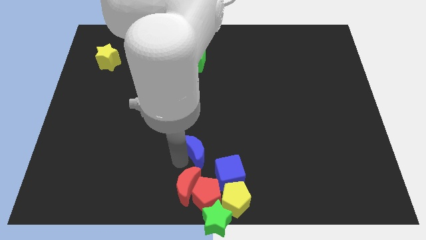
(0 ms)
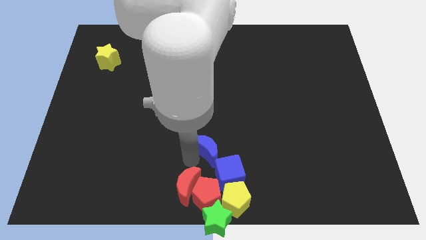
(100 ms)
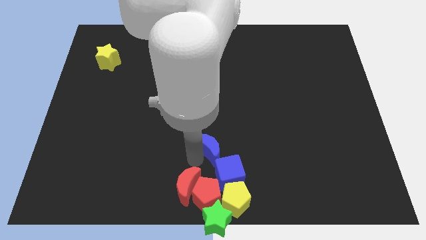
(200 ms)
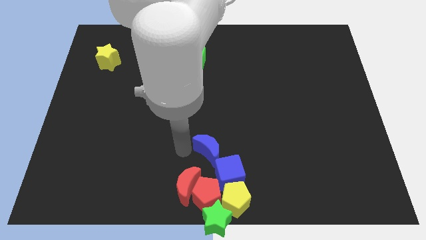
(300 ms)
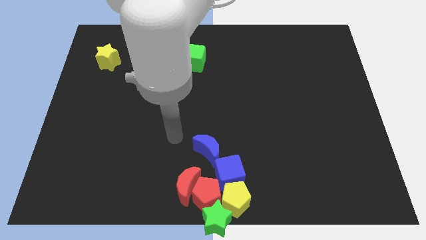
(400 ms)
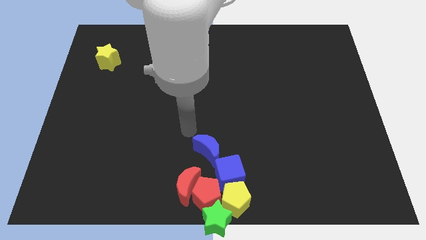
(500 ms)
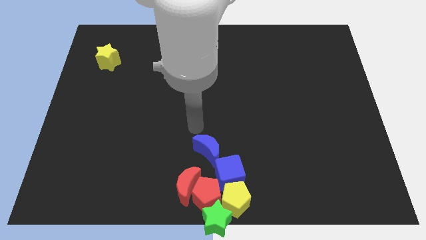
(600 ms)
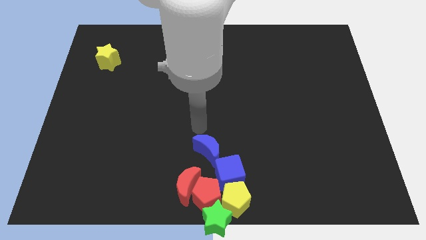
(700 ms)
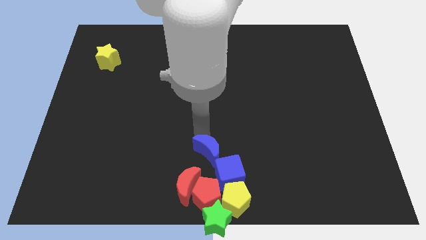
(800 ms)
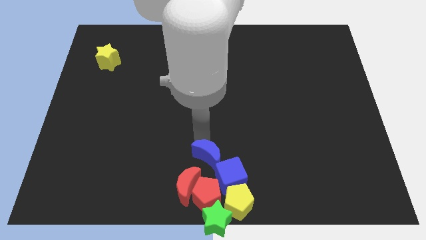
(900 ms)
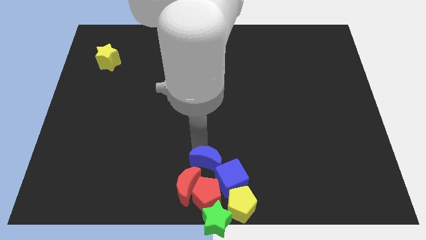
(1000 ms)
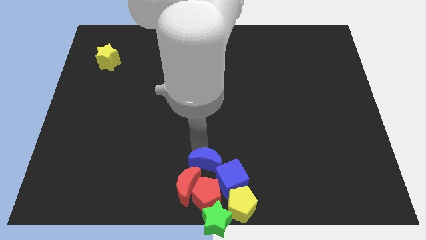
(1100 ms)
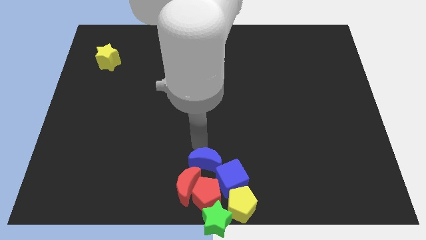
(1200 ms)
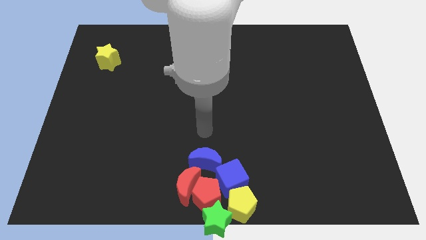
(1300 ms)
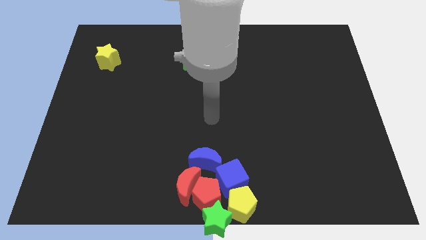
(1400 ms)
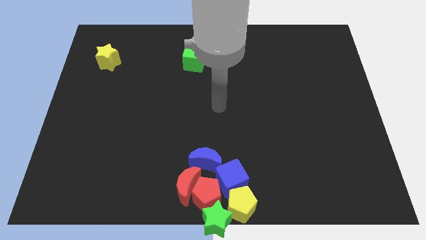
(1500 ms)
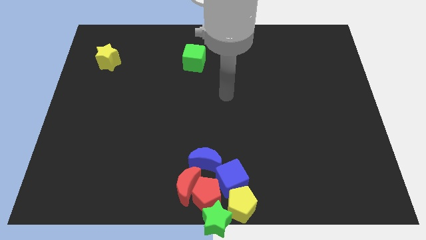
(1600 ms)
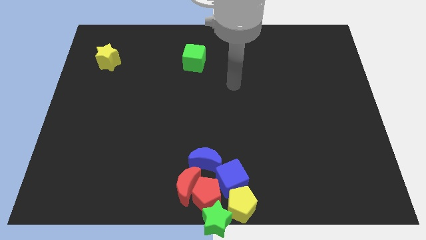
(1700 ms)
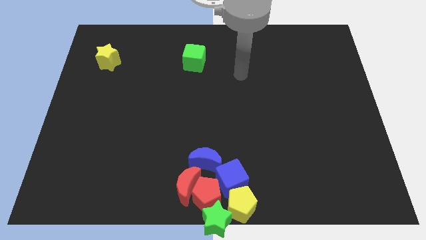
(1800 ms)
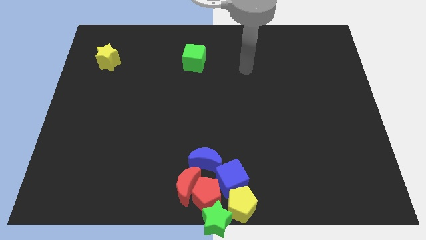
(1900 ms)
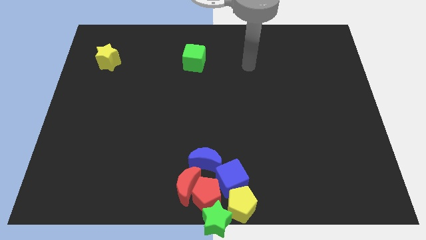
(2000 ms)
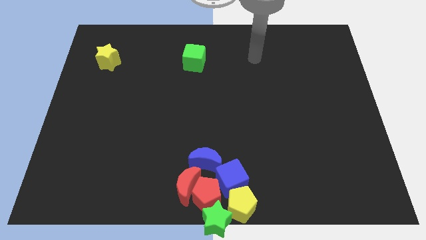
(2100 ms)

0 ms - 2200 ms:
place the blue moon on top of the red moon and blue cube

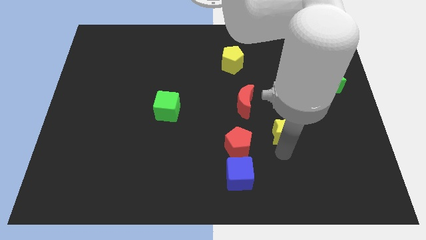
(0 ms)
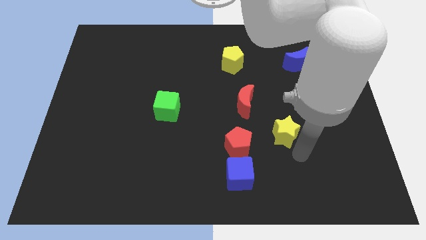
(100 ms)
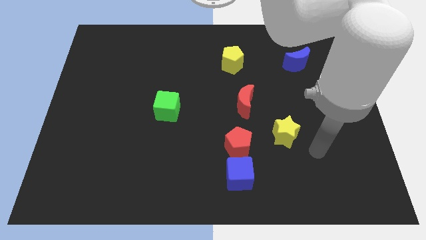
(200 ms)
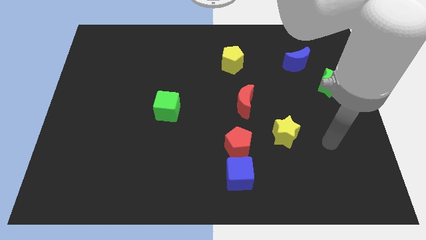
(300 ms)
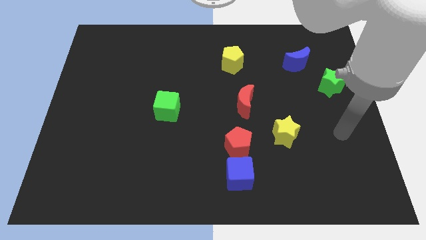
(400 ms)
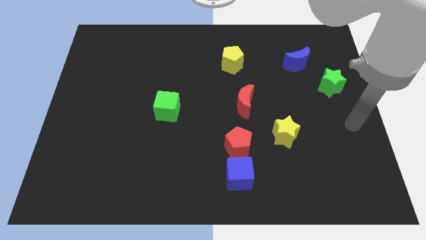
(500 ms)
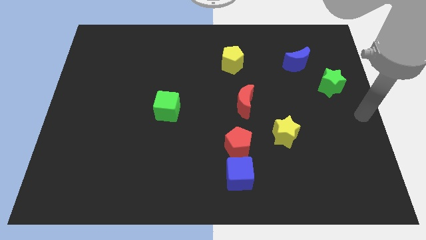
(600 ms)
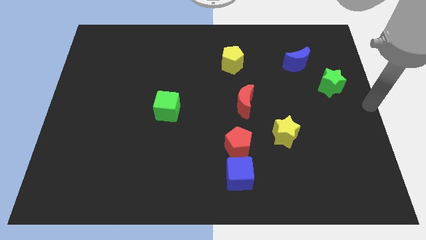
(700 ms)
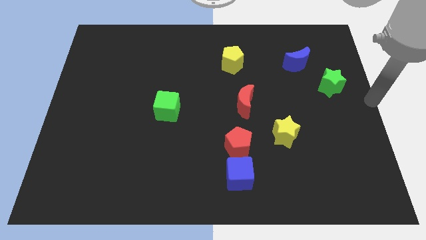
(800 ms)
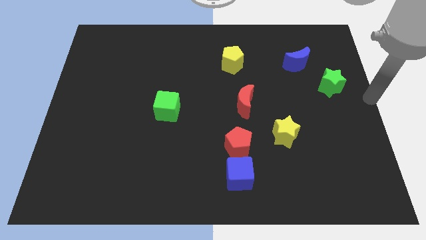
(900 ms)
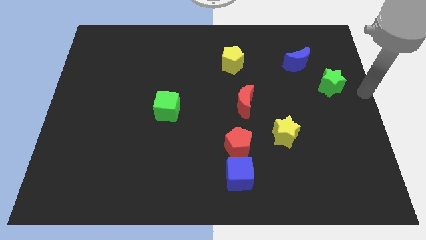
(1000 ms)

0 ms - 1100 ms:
point your arm towards the center right of the board

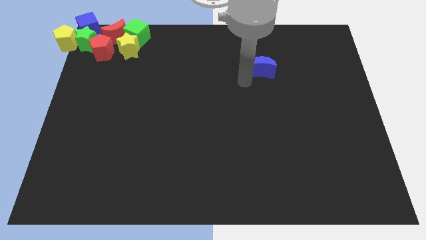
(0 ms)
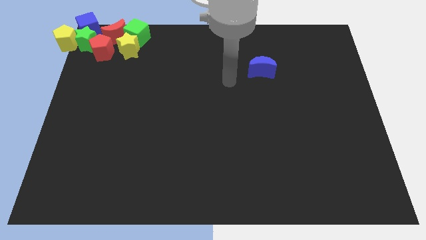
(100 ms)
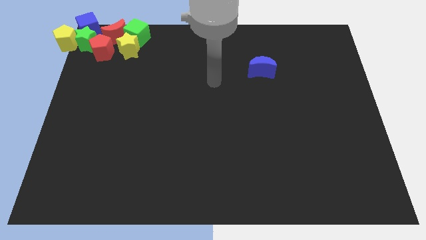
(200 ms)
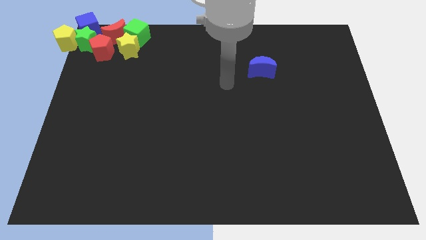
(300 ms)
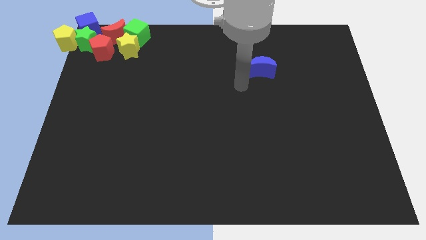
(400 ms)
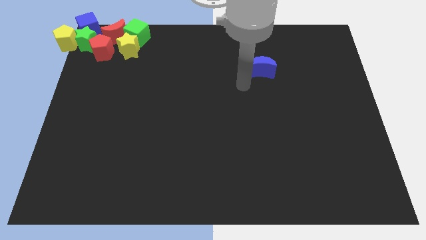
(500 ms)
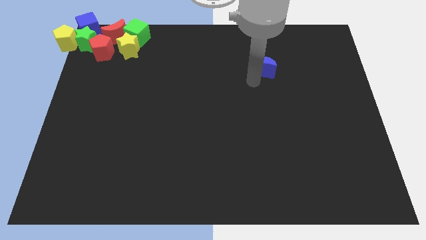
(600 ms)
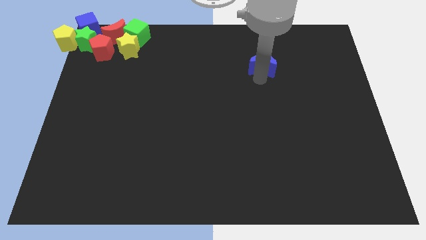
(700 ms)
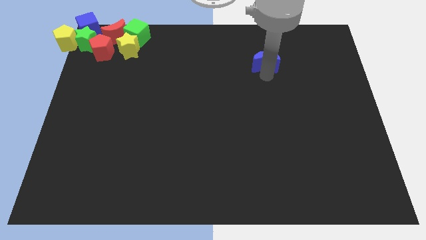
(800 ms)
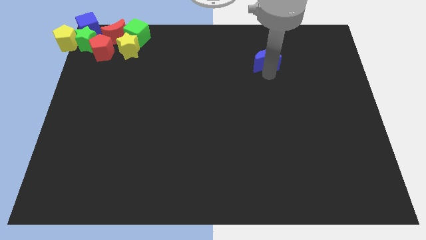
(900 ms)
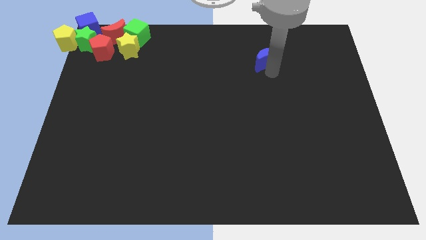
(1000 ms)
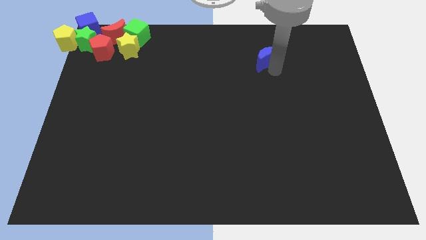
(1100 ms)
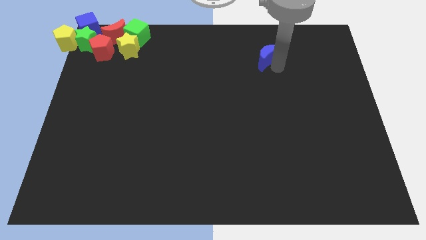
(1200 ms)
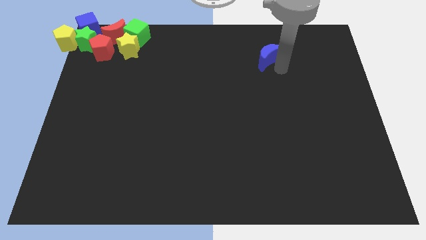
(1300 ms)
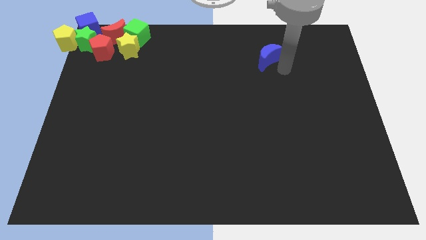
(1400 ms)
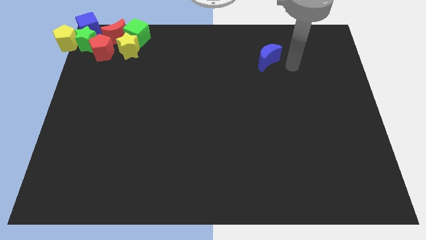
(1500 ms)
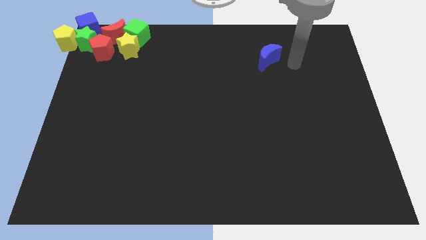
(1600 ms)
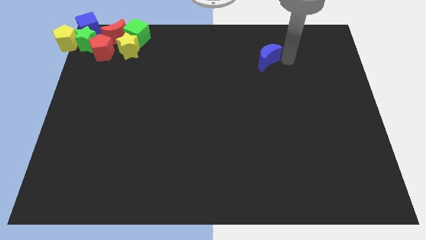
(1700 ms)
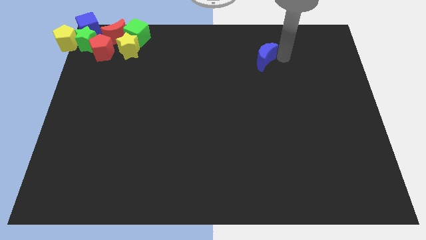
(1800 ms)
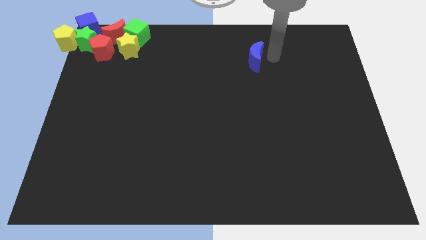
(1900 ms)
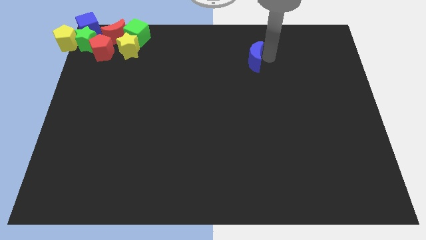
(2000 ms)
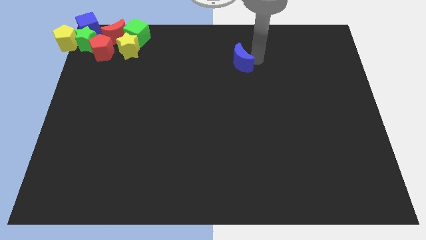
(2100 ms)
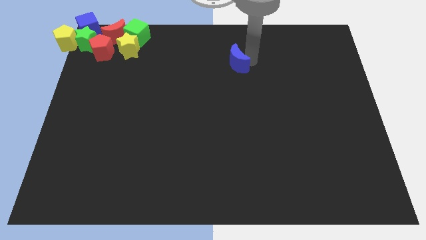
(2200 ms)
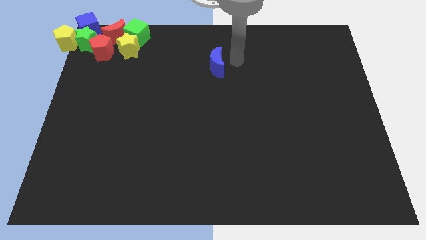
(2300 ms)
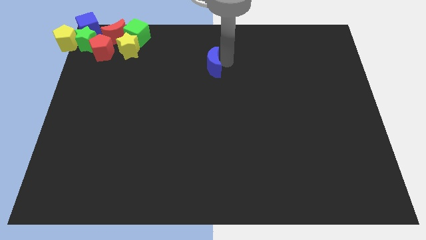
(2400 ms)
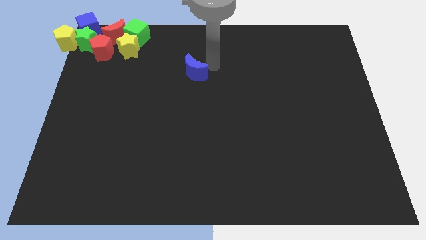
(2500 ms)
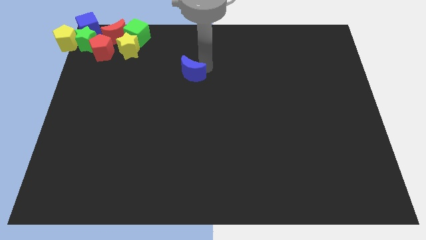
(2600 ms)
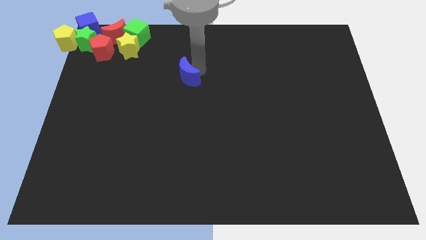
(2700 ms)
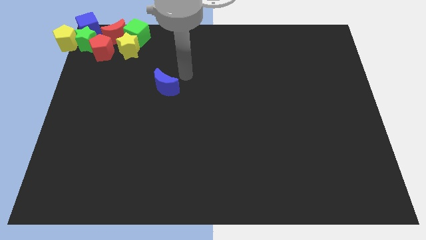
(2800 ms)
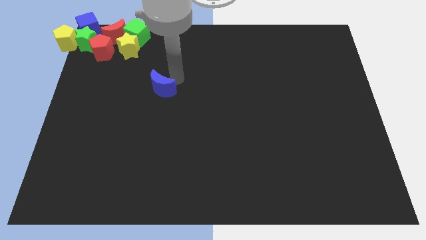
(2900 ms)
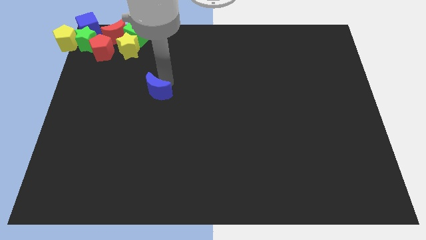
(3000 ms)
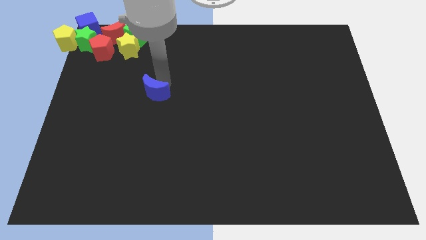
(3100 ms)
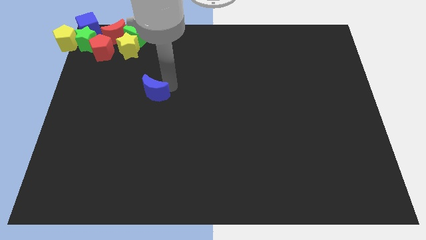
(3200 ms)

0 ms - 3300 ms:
move the blue moon slightly to the left

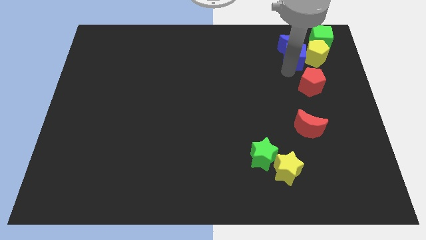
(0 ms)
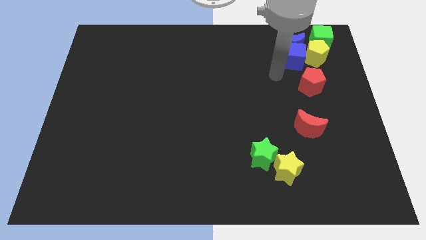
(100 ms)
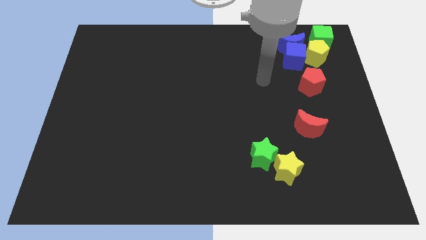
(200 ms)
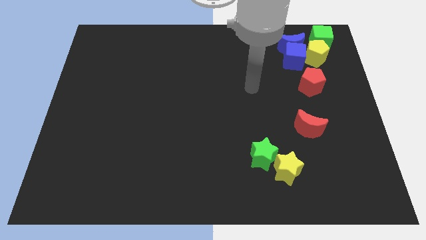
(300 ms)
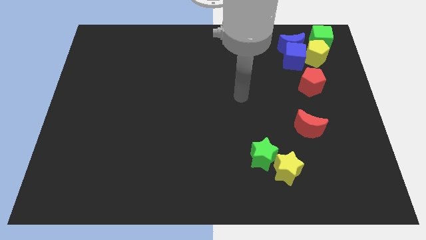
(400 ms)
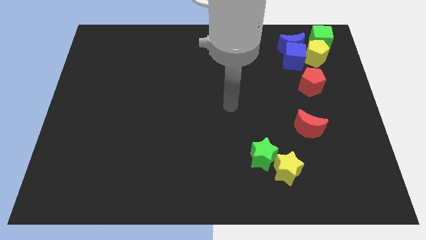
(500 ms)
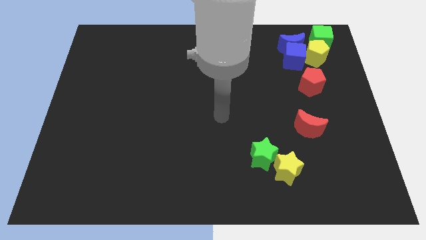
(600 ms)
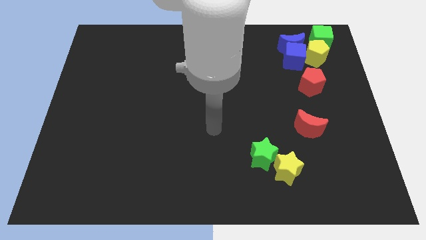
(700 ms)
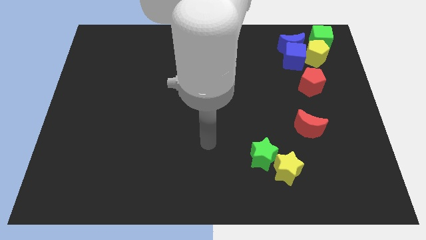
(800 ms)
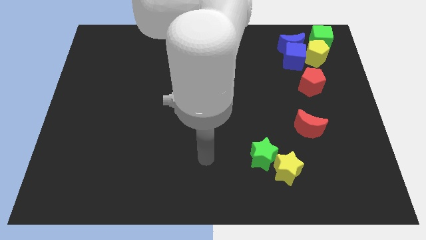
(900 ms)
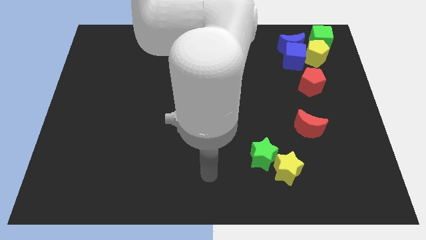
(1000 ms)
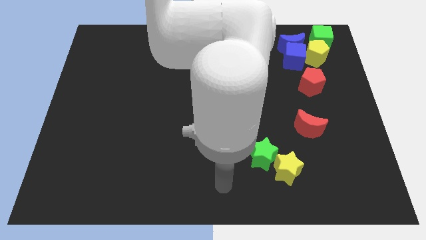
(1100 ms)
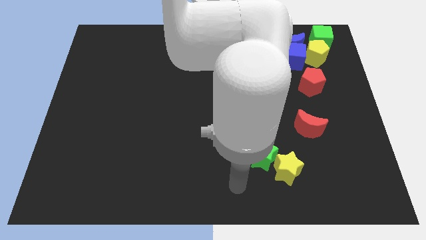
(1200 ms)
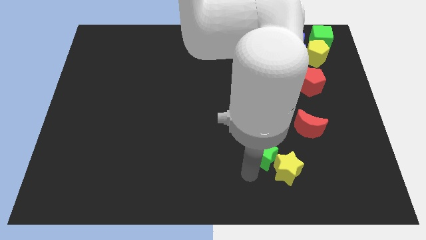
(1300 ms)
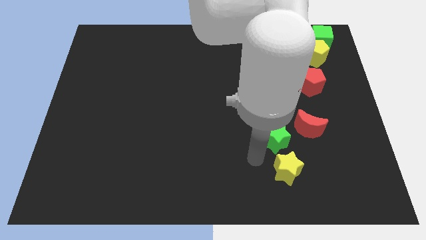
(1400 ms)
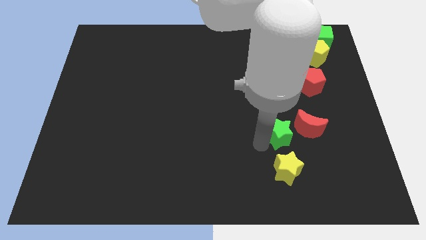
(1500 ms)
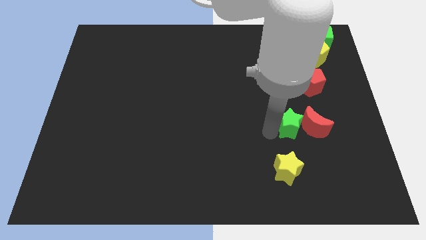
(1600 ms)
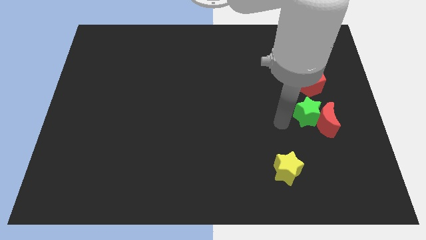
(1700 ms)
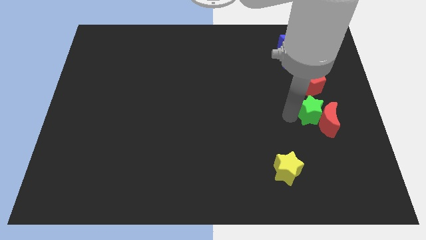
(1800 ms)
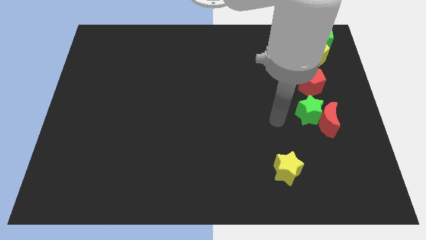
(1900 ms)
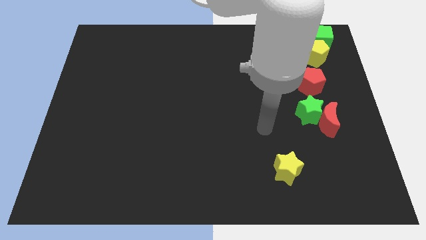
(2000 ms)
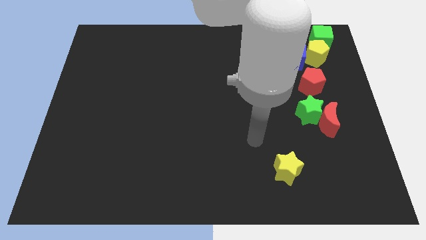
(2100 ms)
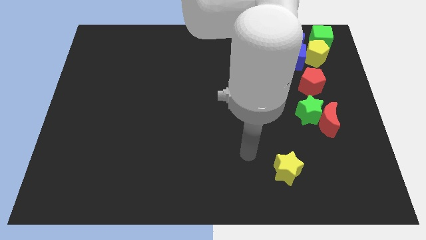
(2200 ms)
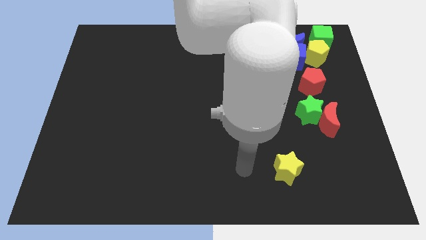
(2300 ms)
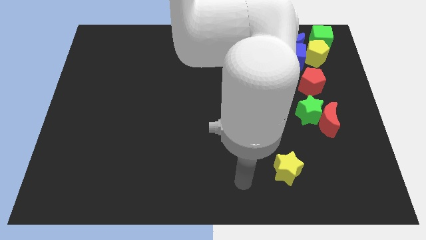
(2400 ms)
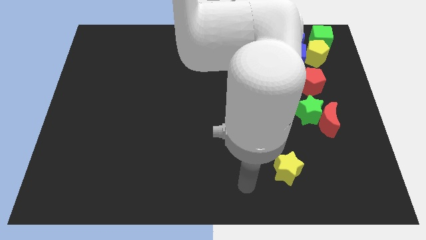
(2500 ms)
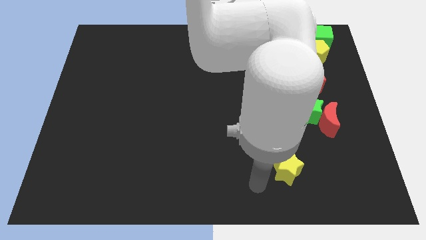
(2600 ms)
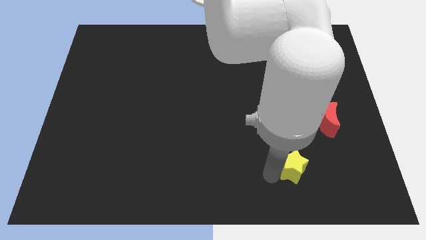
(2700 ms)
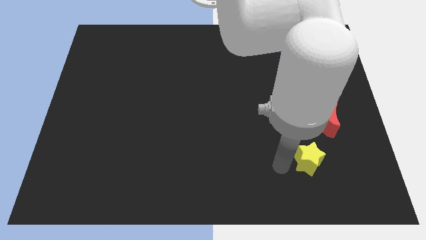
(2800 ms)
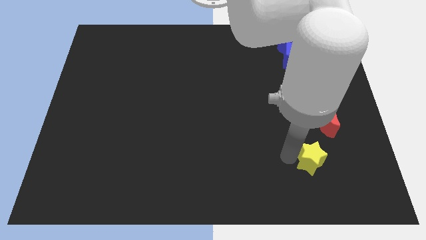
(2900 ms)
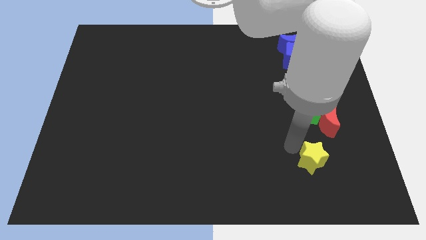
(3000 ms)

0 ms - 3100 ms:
adjust yellow and green stars vertically
